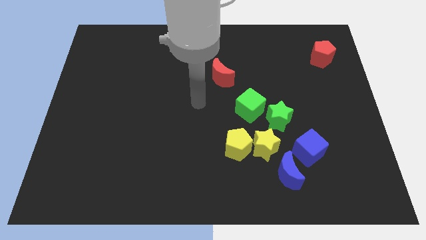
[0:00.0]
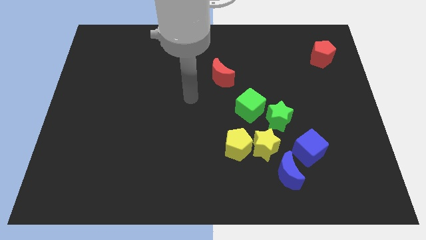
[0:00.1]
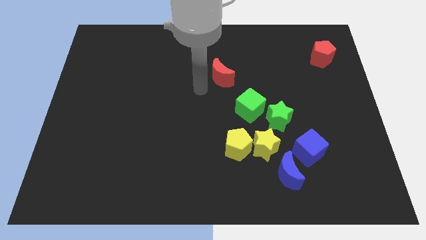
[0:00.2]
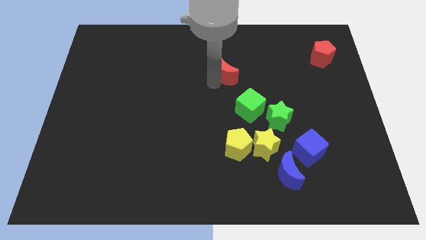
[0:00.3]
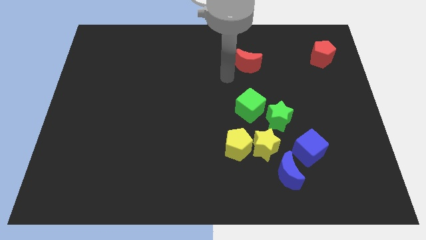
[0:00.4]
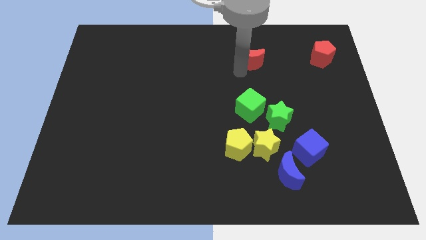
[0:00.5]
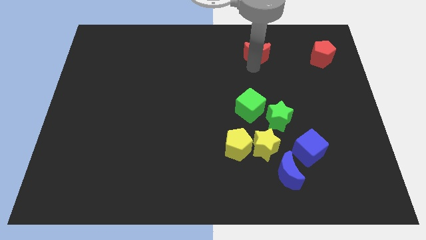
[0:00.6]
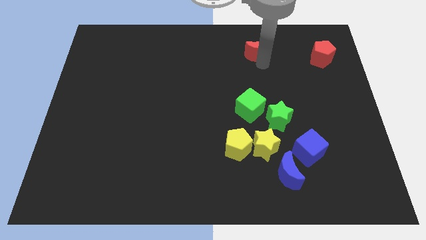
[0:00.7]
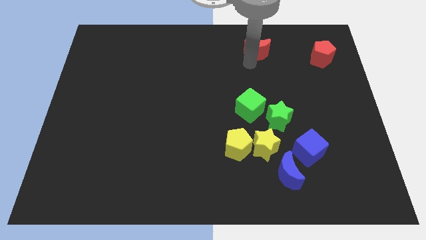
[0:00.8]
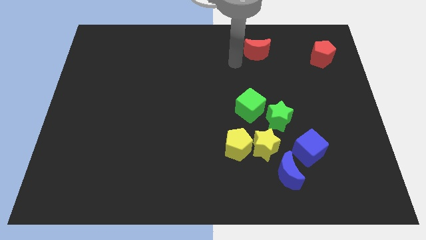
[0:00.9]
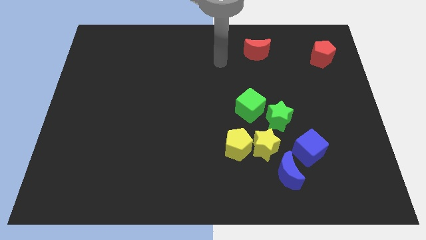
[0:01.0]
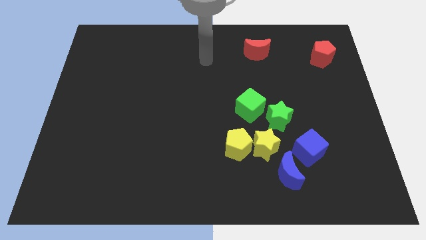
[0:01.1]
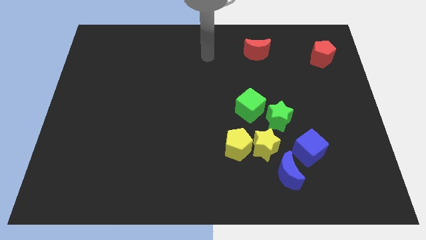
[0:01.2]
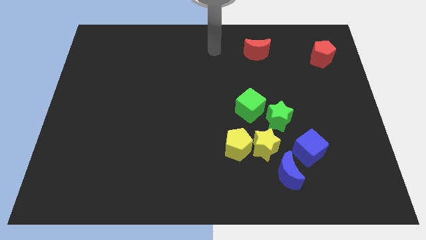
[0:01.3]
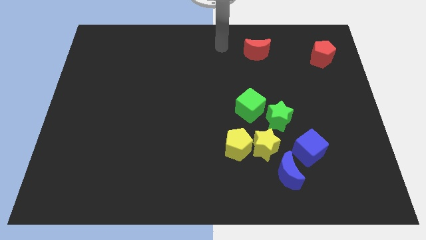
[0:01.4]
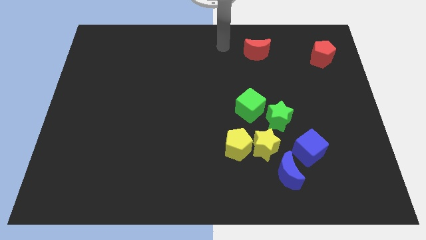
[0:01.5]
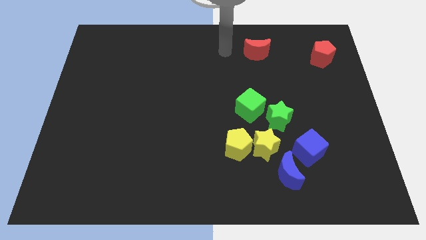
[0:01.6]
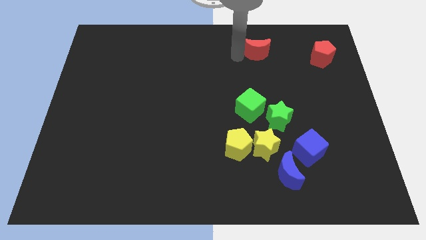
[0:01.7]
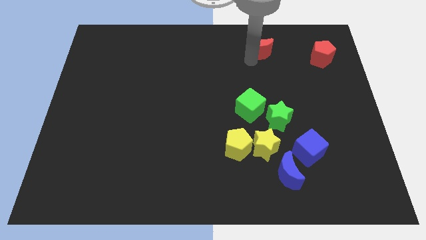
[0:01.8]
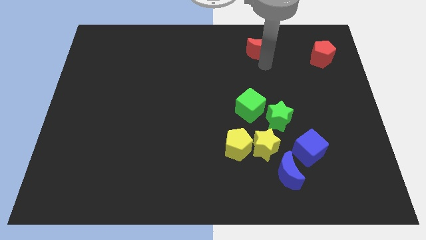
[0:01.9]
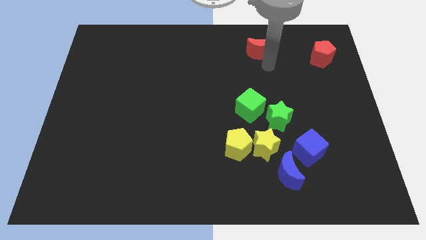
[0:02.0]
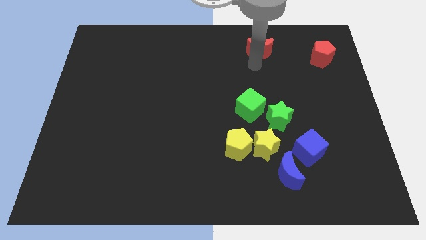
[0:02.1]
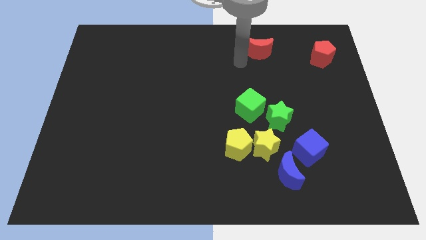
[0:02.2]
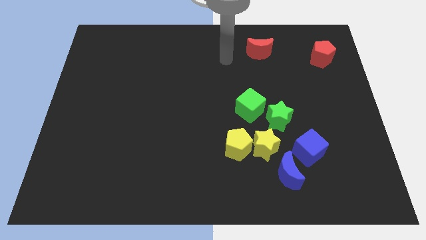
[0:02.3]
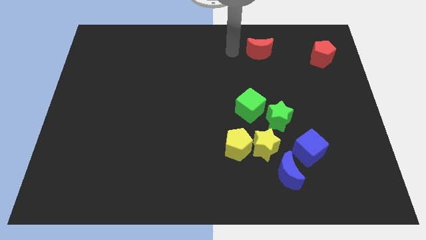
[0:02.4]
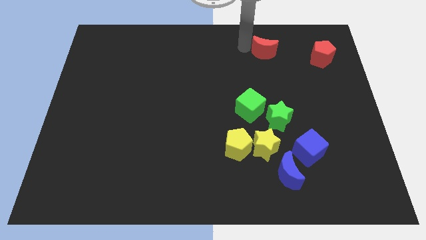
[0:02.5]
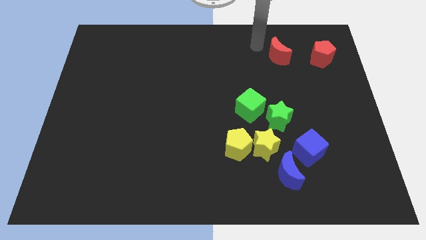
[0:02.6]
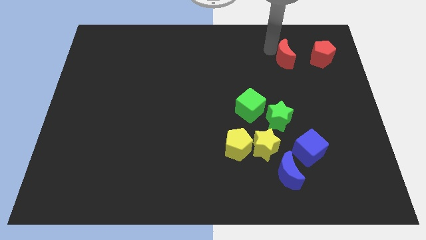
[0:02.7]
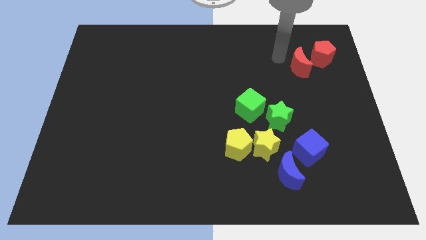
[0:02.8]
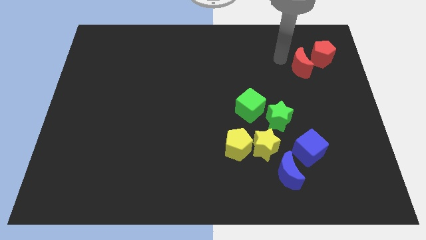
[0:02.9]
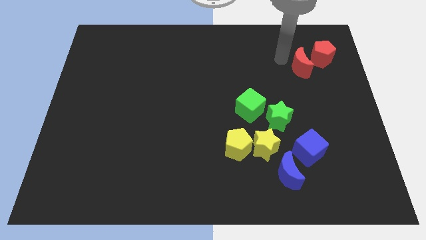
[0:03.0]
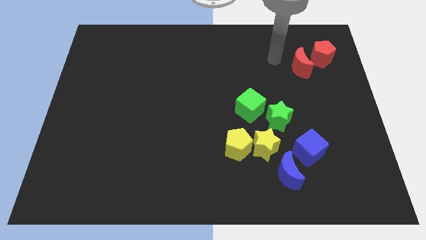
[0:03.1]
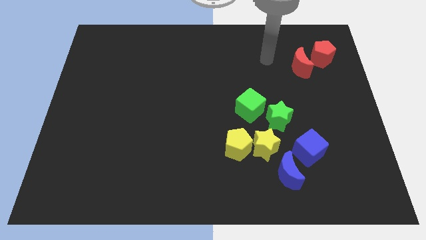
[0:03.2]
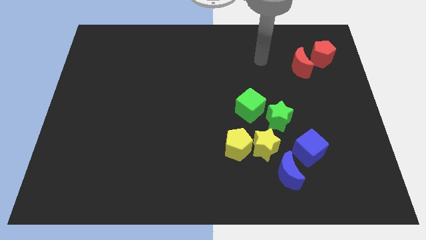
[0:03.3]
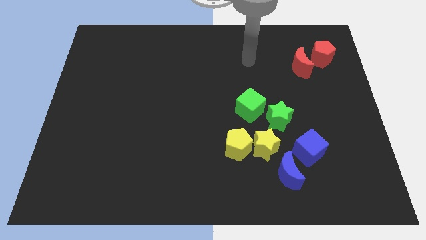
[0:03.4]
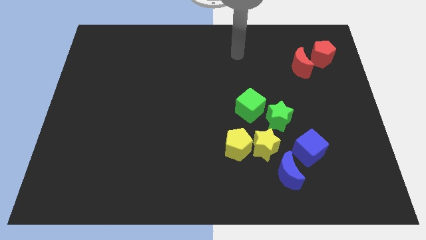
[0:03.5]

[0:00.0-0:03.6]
place the red moon to the bottom left side of the red pentagon

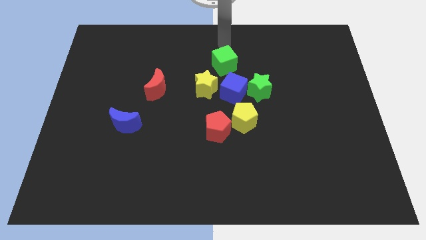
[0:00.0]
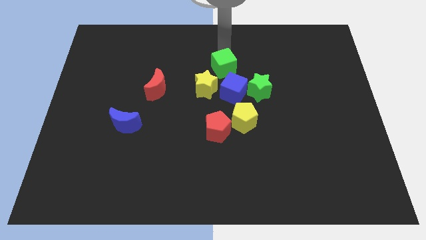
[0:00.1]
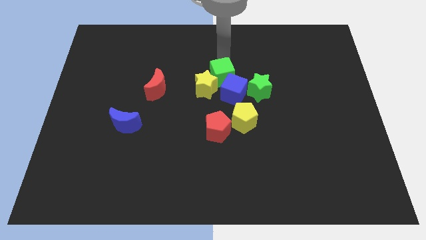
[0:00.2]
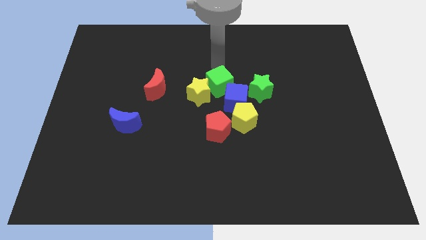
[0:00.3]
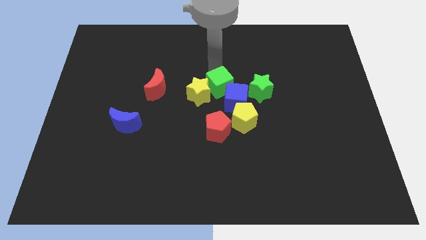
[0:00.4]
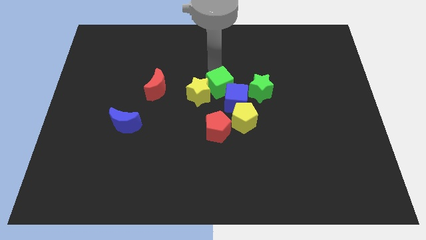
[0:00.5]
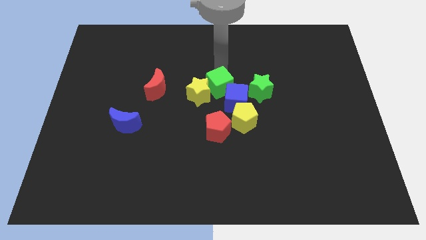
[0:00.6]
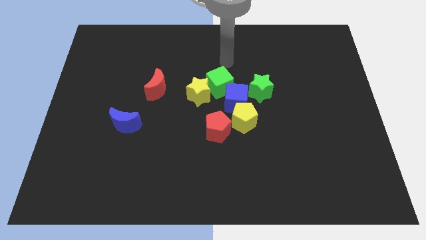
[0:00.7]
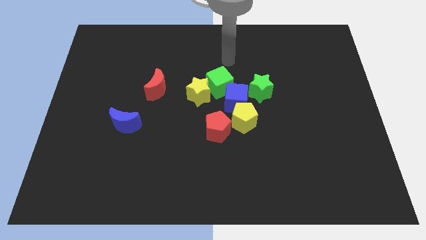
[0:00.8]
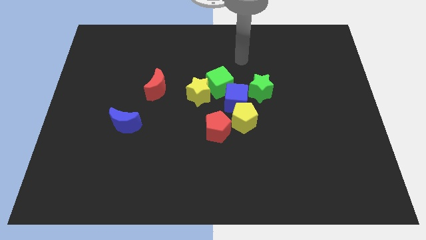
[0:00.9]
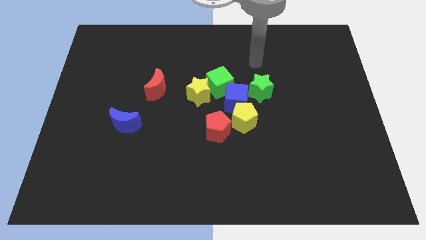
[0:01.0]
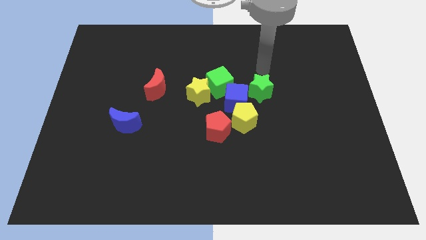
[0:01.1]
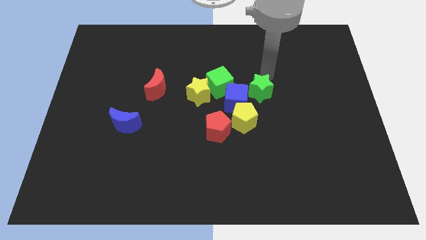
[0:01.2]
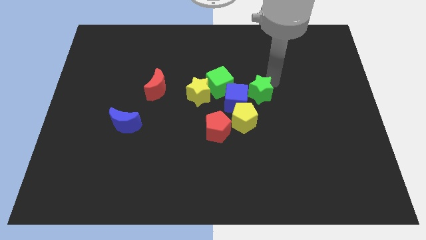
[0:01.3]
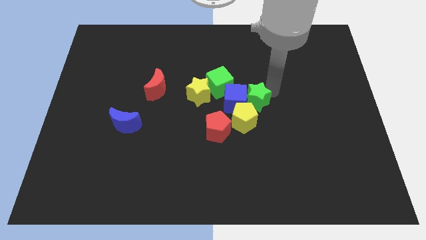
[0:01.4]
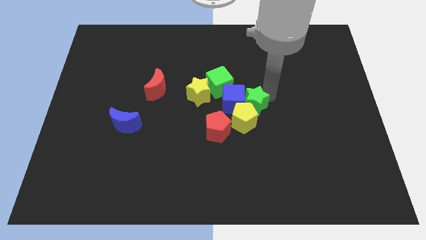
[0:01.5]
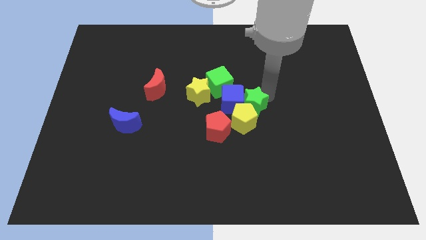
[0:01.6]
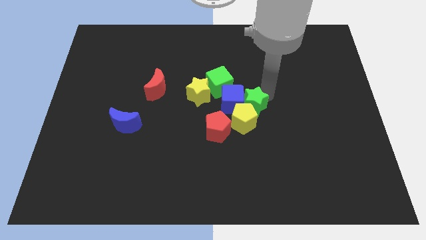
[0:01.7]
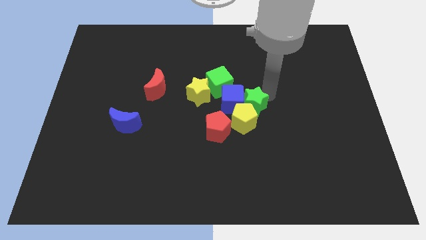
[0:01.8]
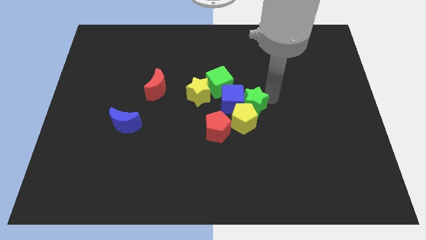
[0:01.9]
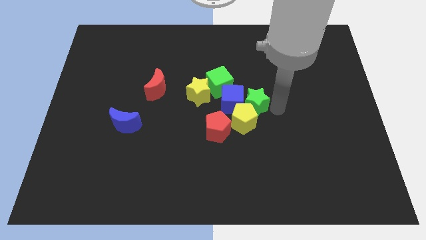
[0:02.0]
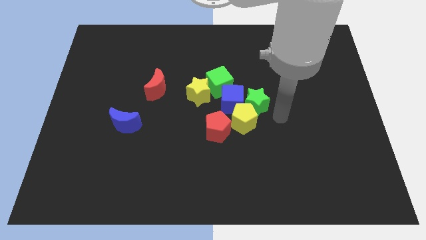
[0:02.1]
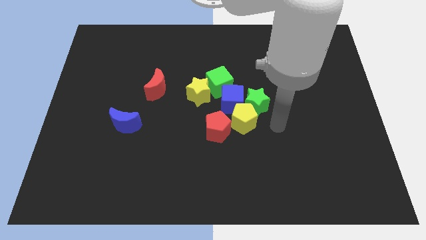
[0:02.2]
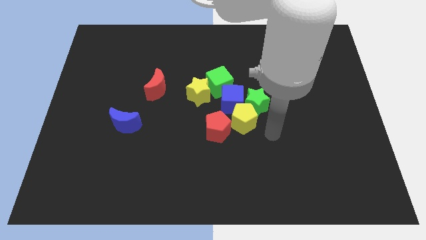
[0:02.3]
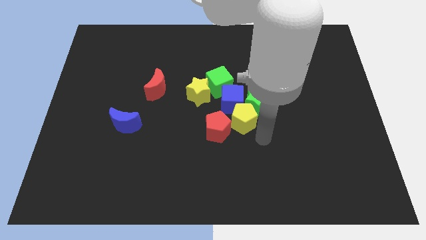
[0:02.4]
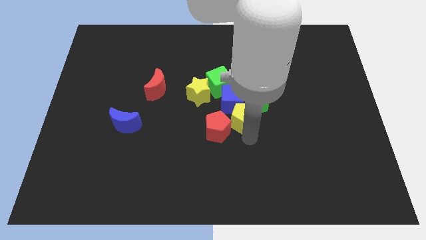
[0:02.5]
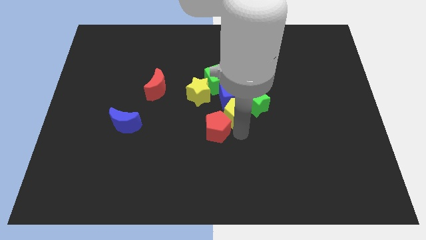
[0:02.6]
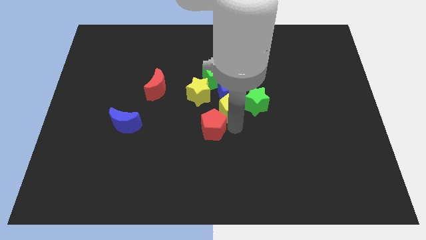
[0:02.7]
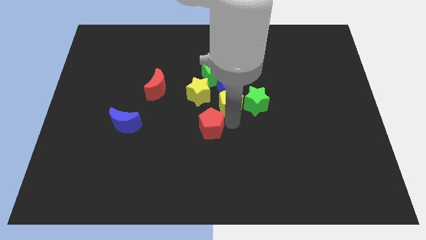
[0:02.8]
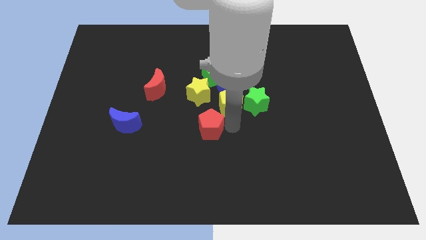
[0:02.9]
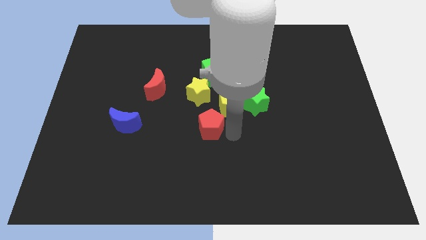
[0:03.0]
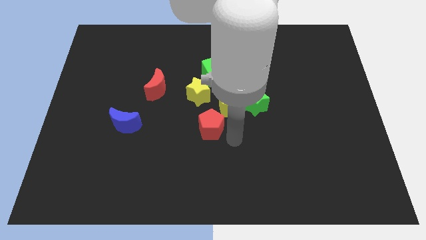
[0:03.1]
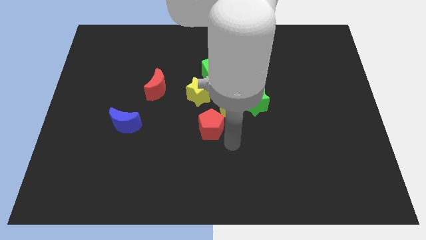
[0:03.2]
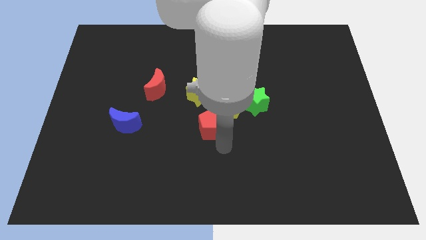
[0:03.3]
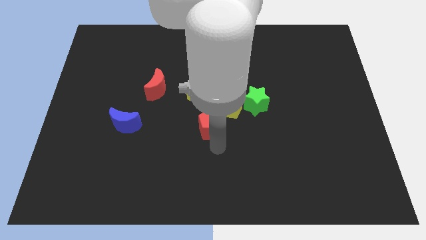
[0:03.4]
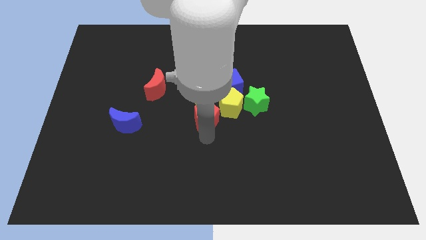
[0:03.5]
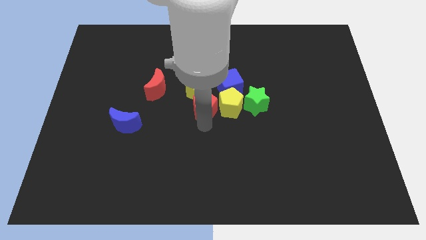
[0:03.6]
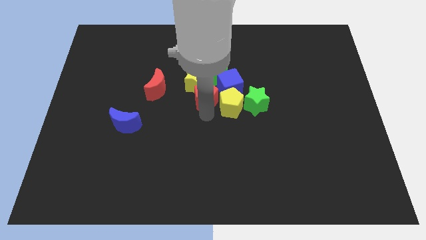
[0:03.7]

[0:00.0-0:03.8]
place the group of blocks at the center of the board

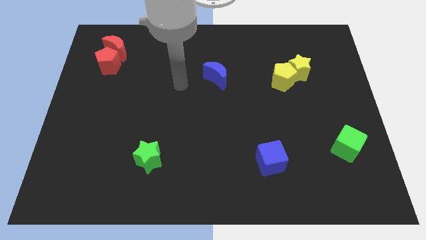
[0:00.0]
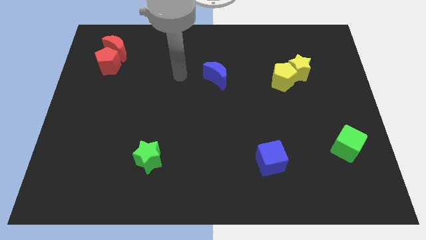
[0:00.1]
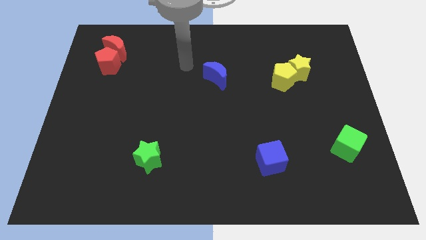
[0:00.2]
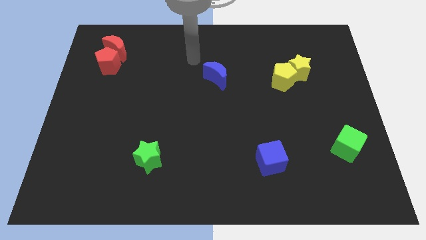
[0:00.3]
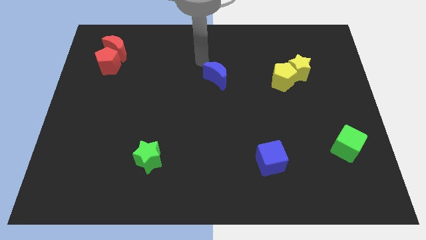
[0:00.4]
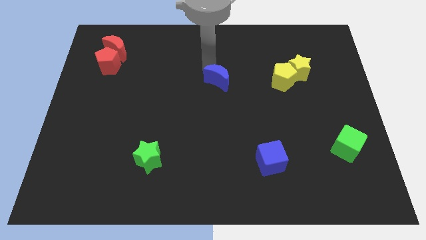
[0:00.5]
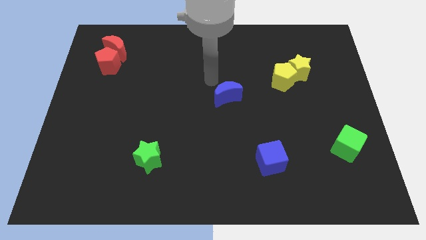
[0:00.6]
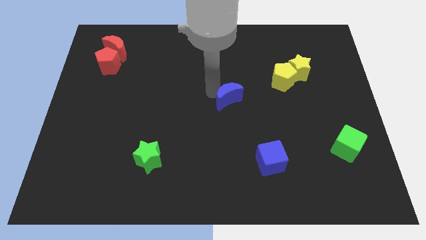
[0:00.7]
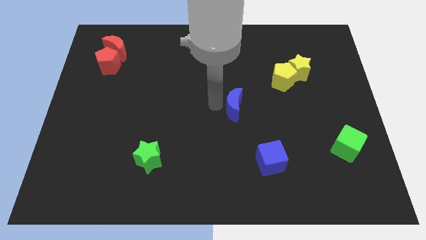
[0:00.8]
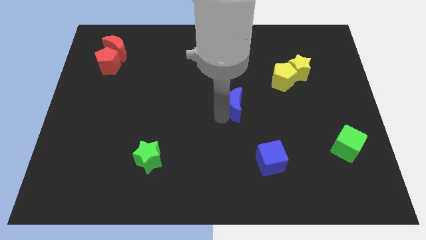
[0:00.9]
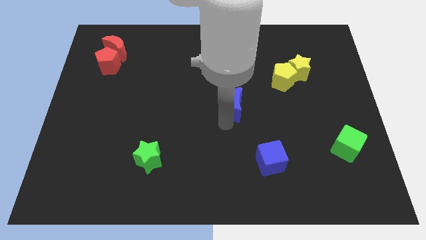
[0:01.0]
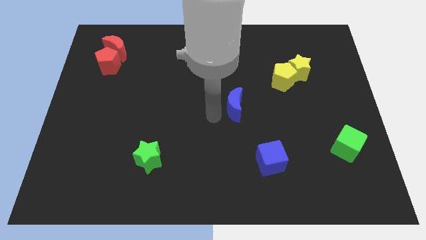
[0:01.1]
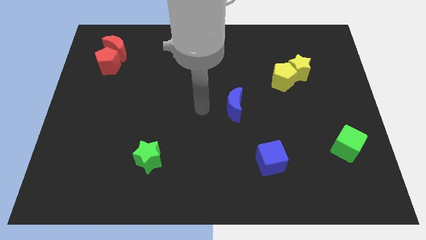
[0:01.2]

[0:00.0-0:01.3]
place the blue crescent at the center of the board

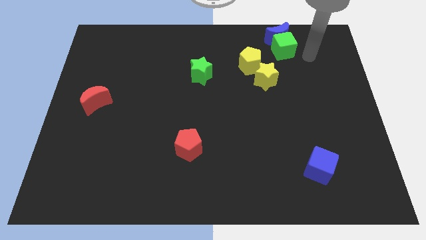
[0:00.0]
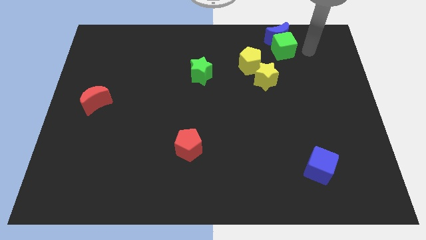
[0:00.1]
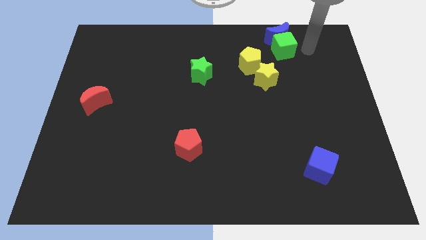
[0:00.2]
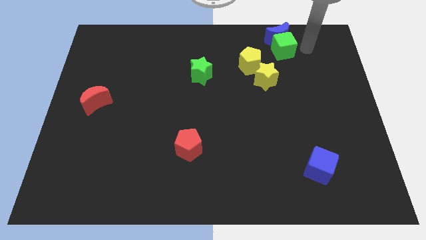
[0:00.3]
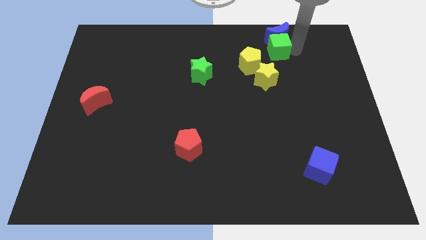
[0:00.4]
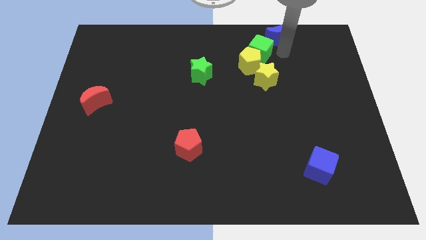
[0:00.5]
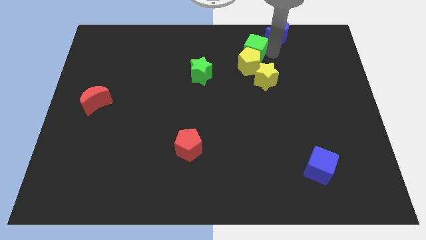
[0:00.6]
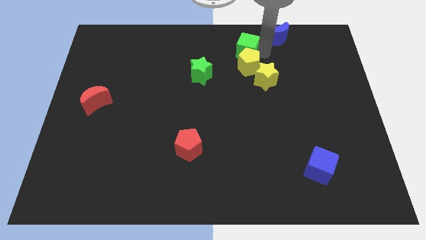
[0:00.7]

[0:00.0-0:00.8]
place green cube on the top of yellow pentagon
